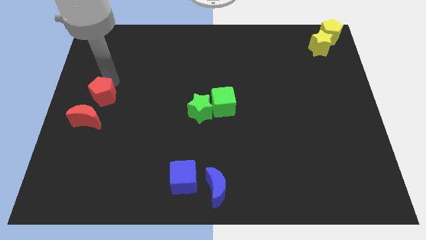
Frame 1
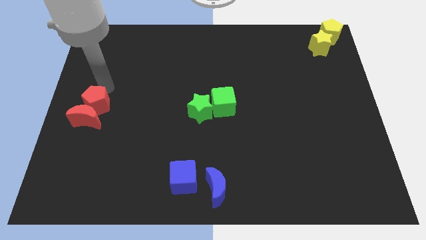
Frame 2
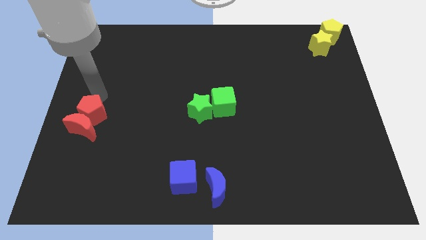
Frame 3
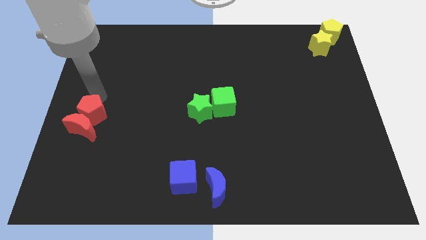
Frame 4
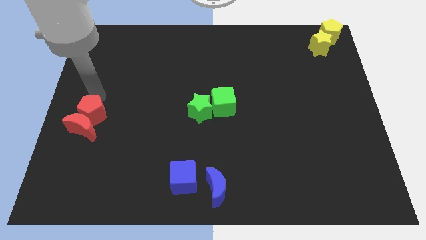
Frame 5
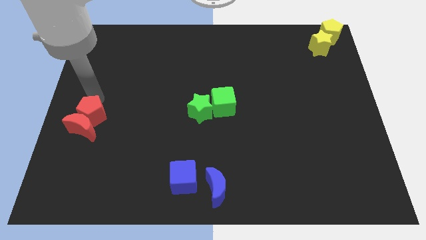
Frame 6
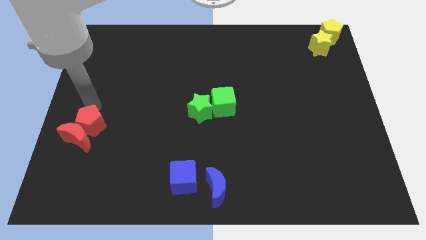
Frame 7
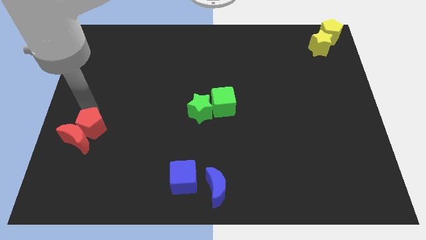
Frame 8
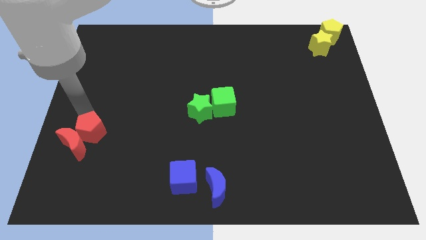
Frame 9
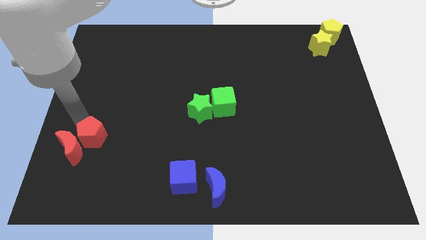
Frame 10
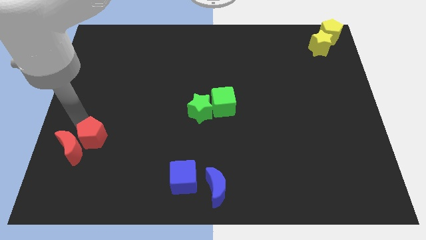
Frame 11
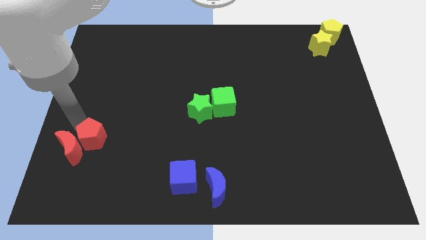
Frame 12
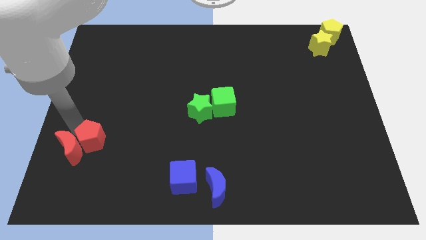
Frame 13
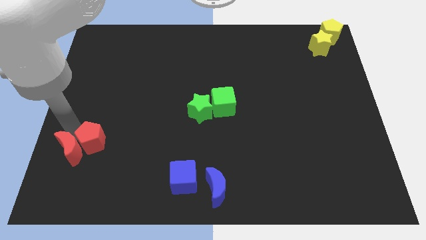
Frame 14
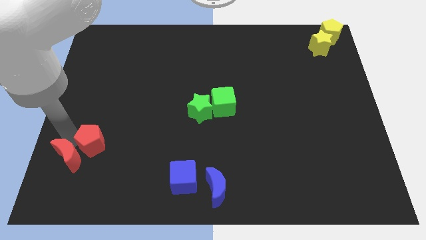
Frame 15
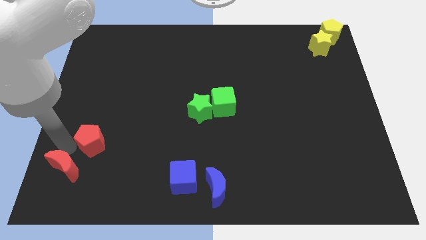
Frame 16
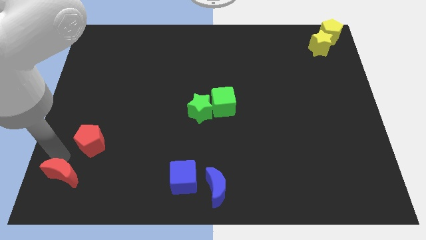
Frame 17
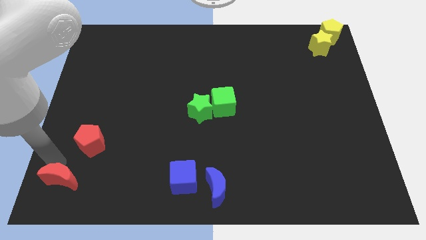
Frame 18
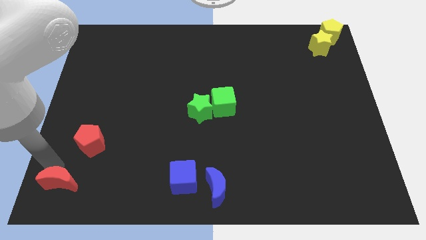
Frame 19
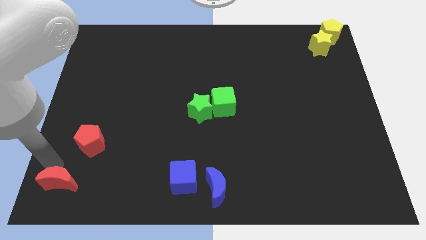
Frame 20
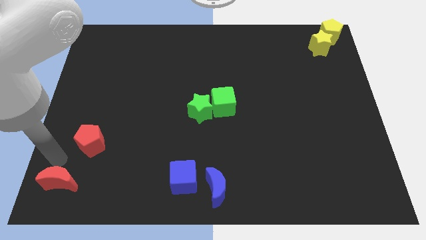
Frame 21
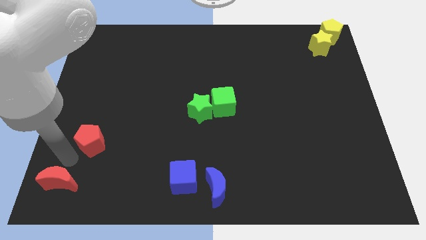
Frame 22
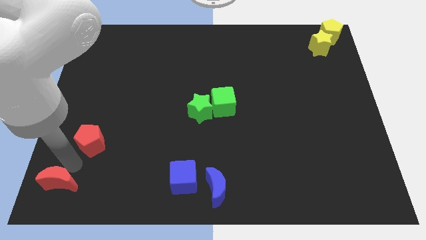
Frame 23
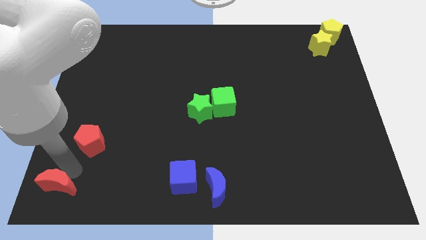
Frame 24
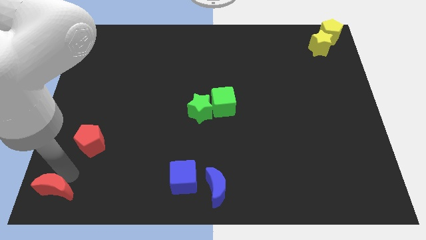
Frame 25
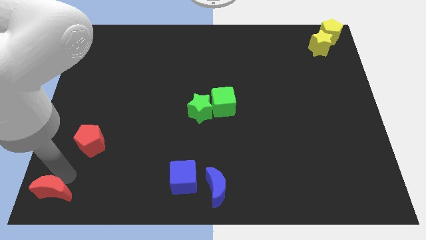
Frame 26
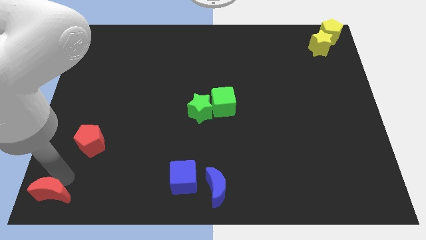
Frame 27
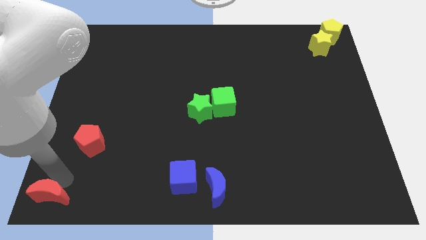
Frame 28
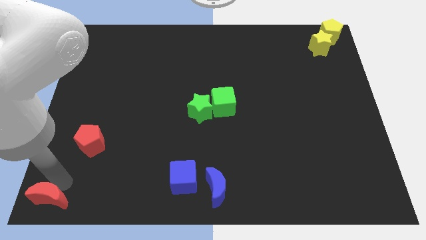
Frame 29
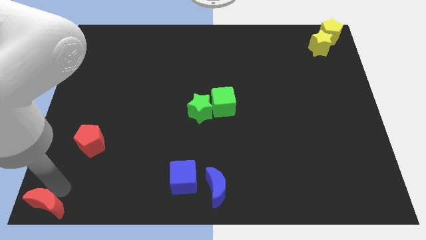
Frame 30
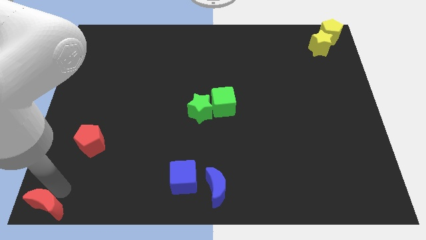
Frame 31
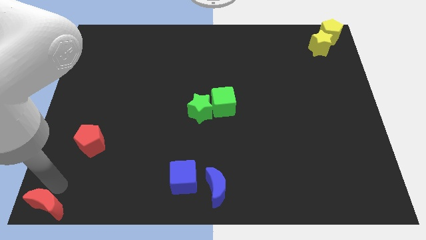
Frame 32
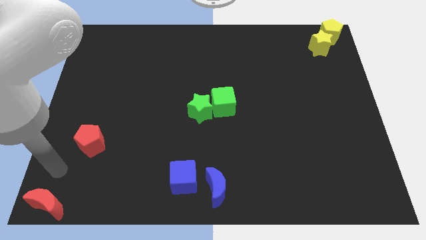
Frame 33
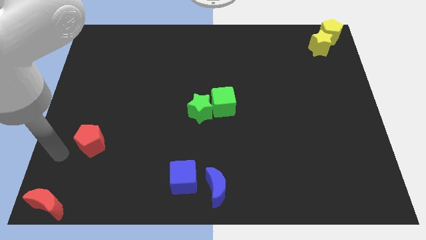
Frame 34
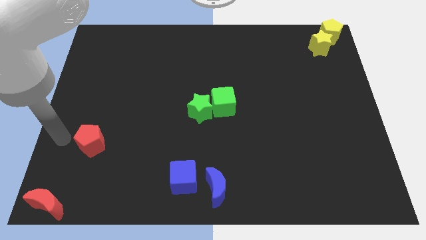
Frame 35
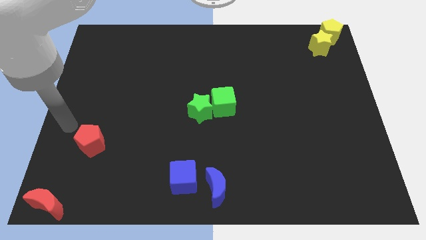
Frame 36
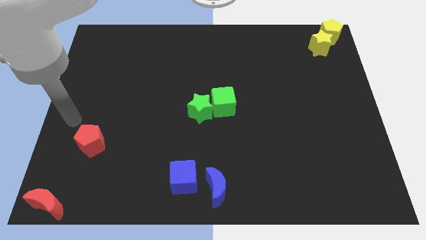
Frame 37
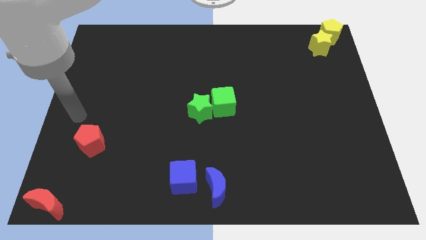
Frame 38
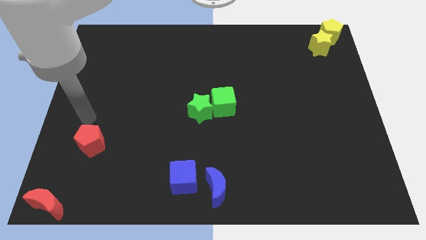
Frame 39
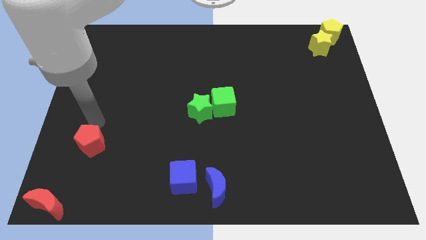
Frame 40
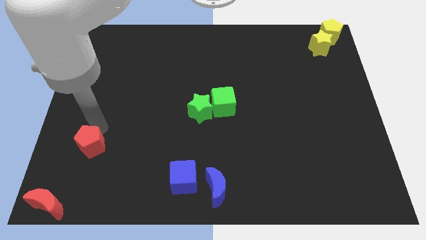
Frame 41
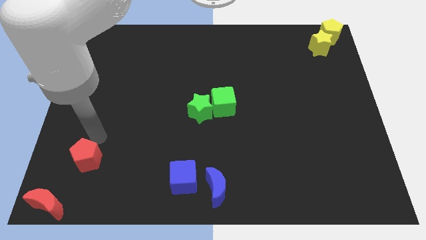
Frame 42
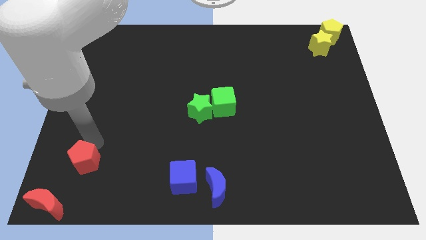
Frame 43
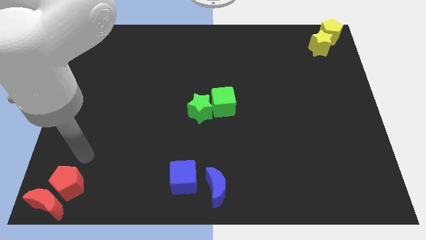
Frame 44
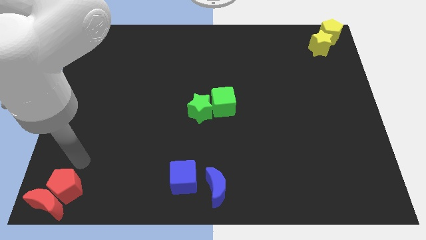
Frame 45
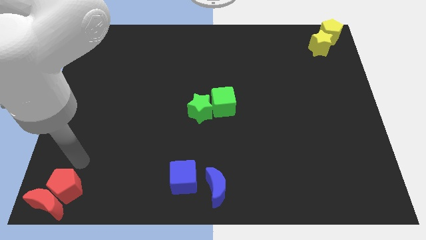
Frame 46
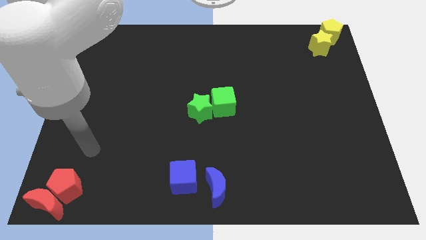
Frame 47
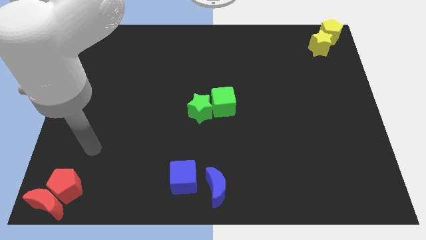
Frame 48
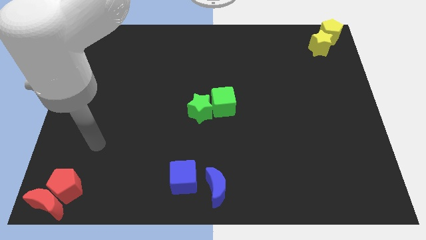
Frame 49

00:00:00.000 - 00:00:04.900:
move both the red blocks into the bottom left side of the board

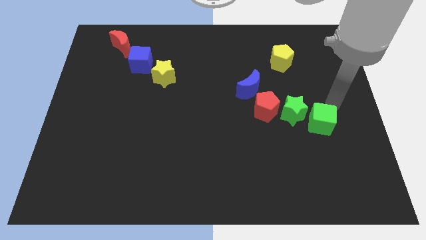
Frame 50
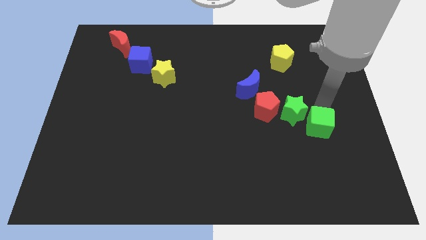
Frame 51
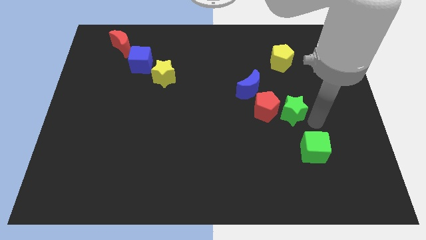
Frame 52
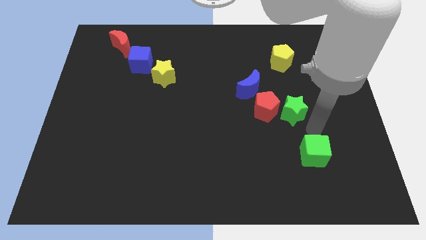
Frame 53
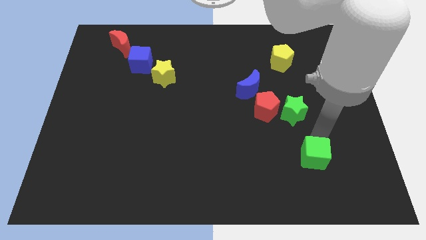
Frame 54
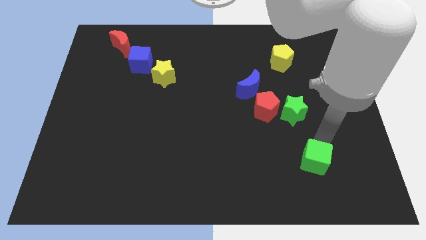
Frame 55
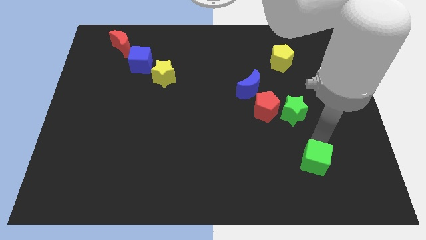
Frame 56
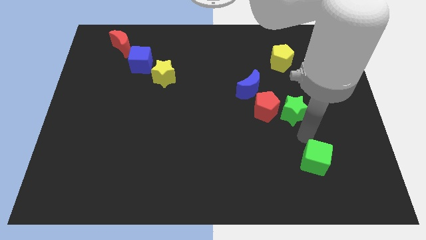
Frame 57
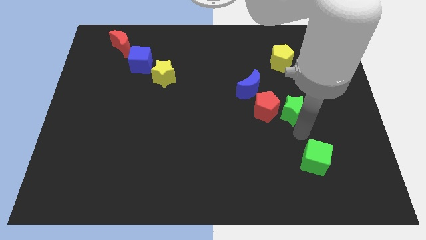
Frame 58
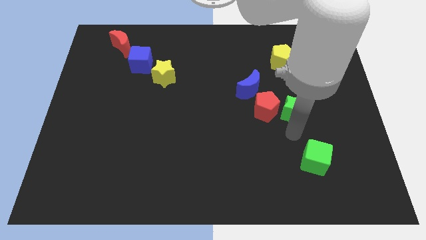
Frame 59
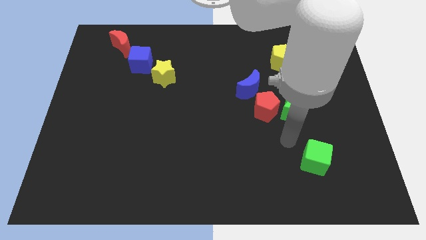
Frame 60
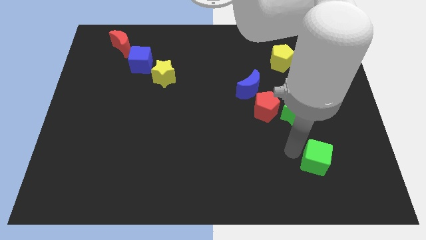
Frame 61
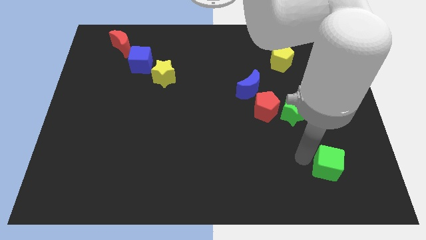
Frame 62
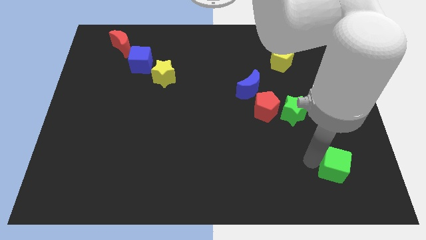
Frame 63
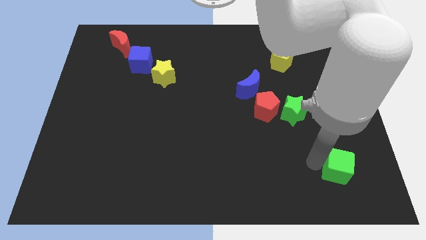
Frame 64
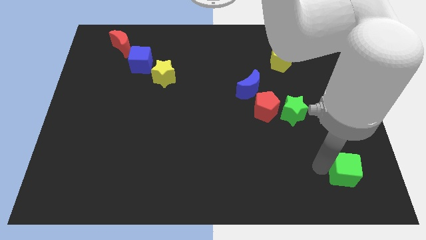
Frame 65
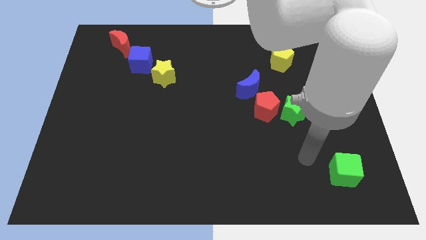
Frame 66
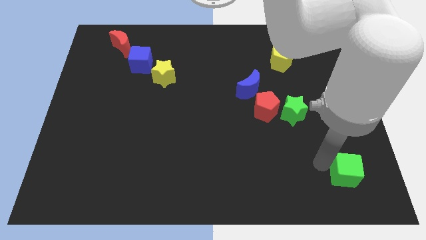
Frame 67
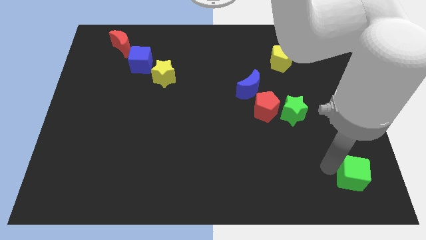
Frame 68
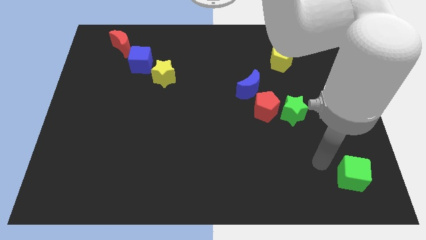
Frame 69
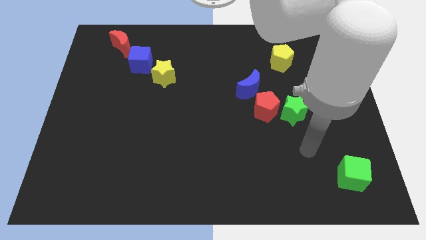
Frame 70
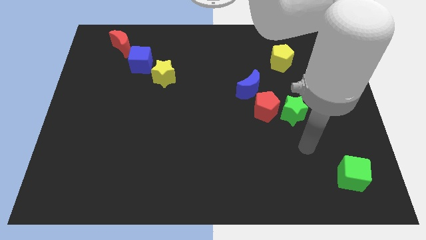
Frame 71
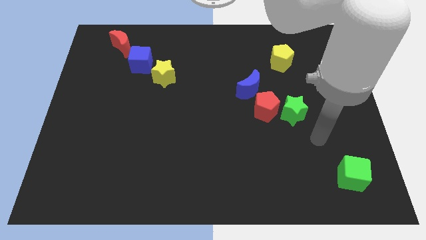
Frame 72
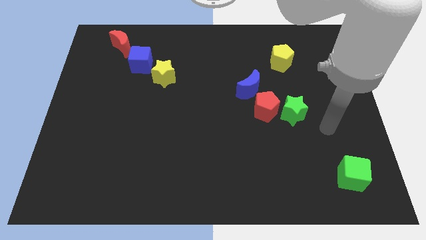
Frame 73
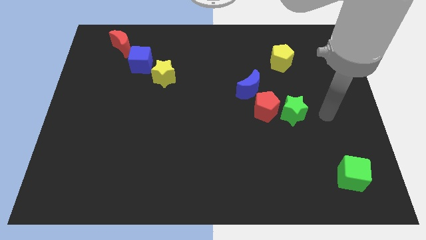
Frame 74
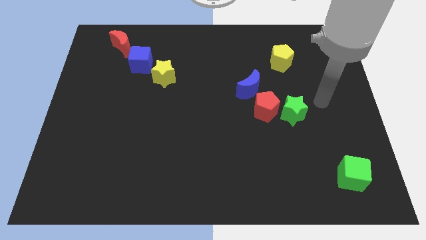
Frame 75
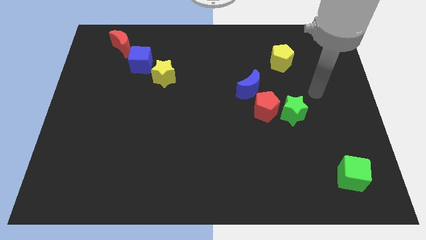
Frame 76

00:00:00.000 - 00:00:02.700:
push the green cube to the bottom right side of the board

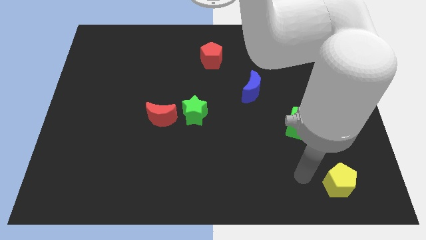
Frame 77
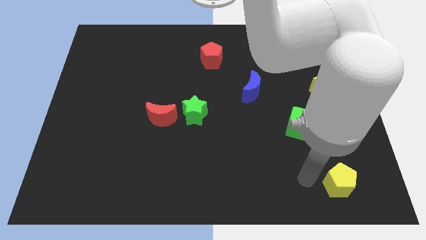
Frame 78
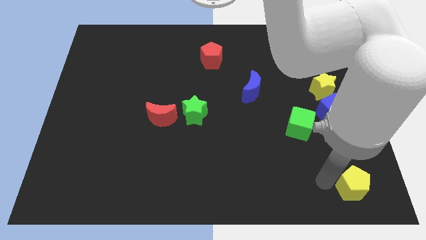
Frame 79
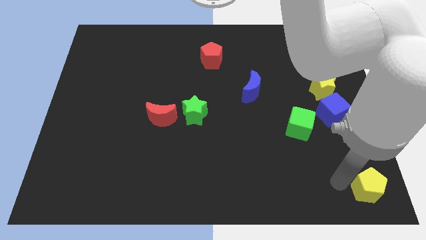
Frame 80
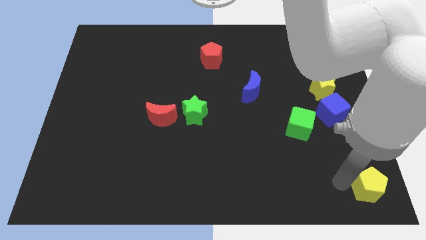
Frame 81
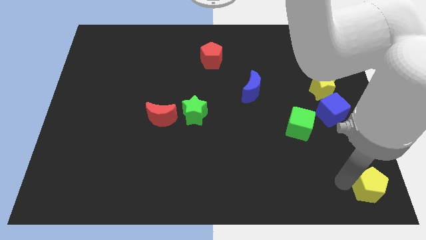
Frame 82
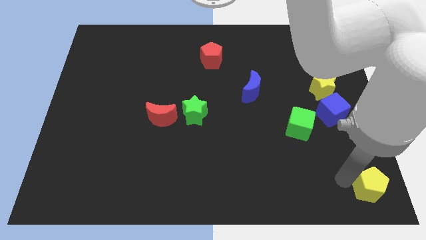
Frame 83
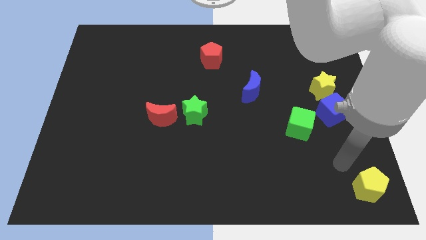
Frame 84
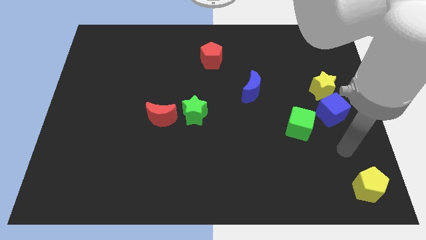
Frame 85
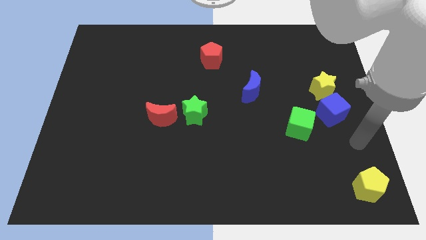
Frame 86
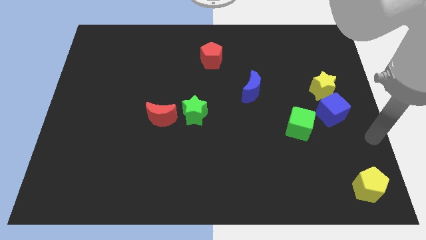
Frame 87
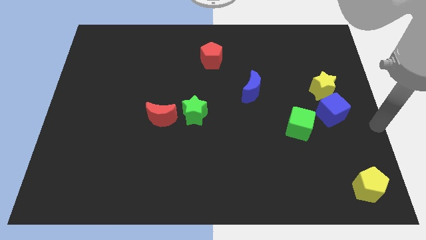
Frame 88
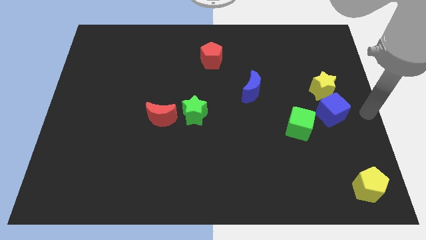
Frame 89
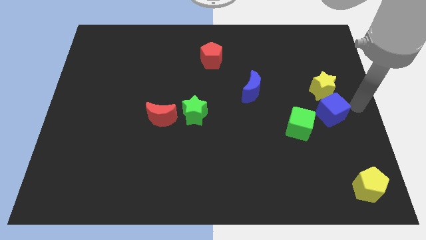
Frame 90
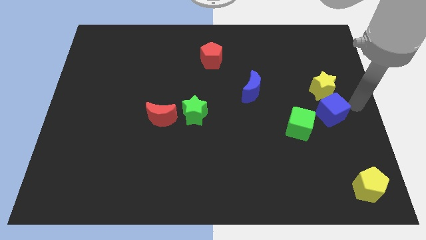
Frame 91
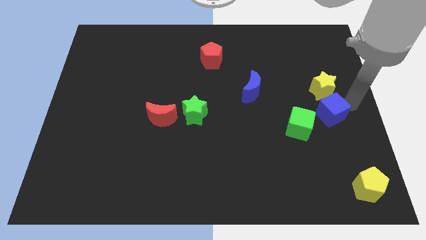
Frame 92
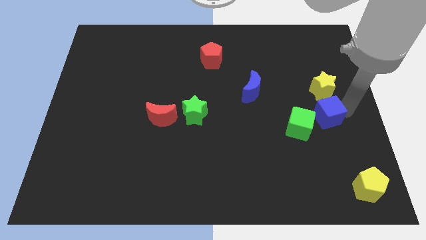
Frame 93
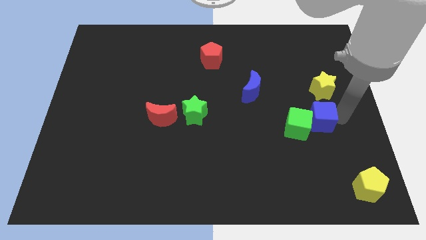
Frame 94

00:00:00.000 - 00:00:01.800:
push the blue cube into green cube
